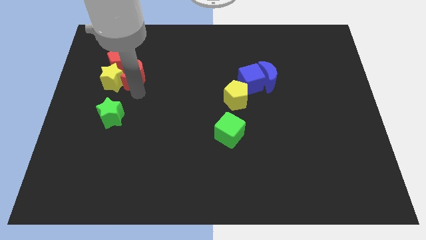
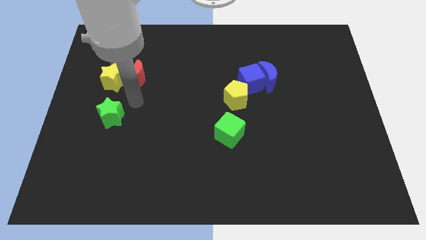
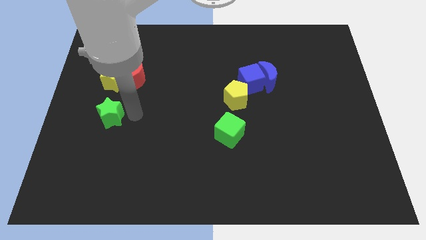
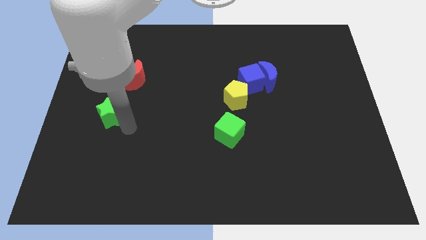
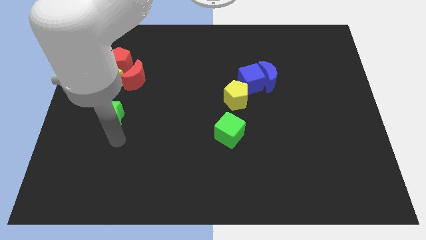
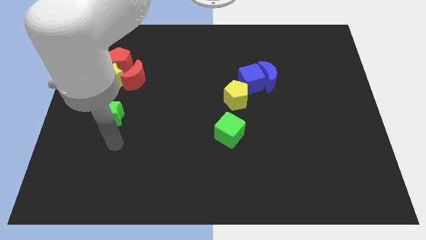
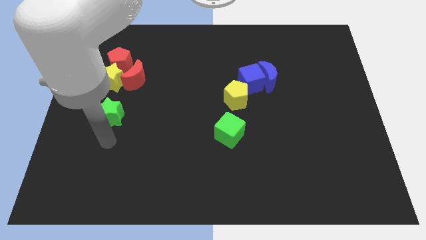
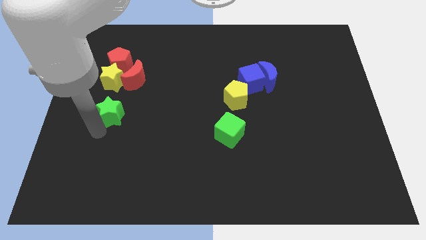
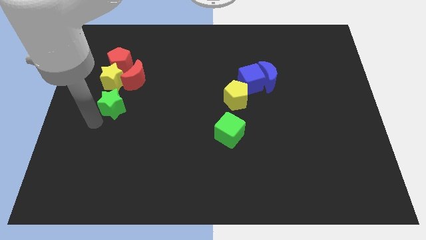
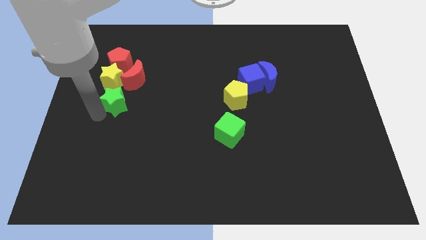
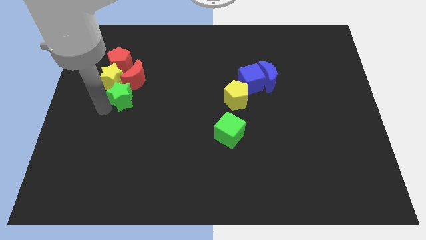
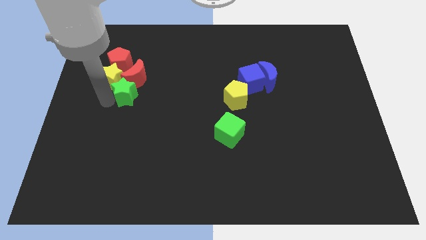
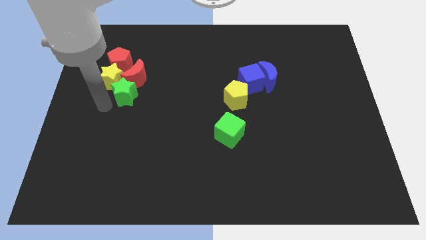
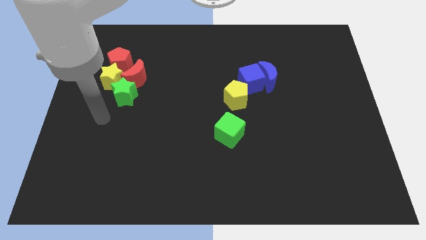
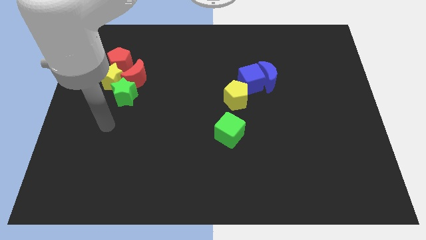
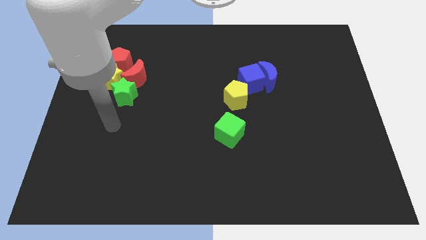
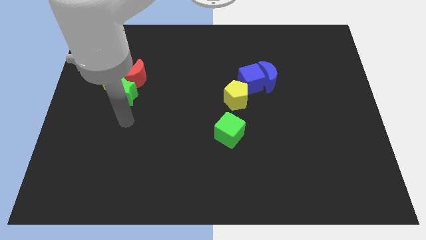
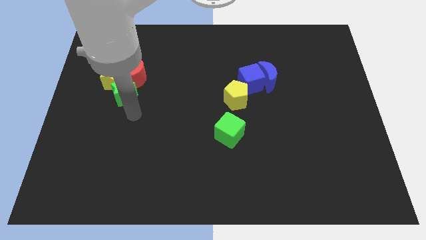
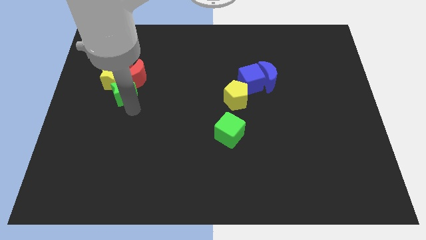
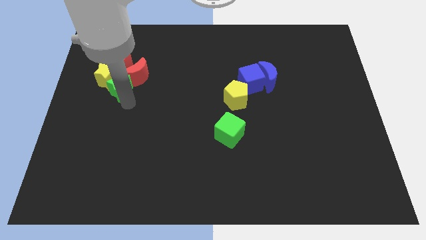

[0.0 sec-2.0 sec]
push the green star into the group of blocks

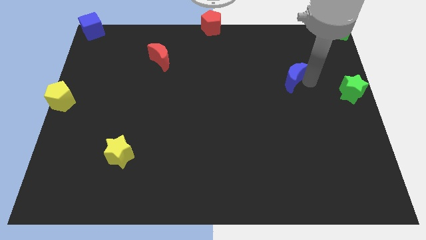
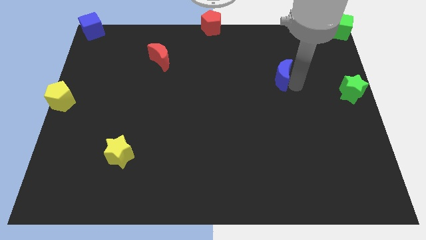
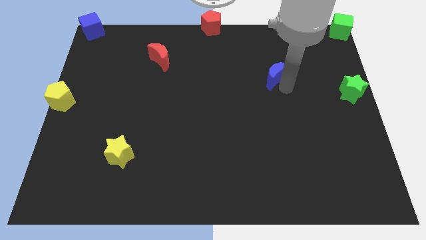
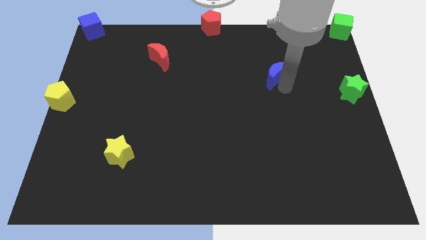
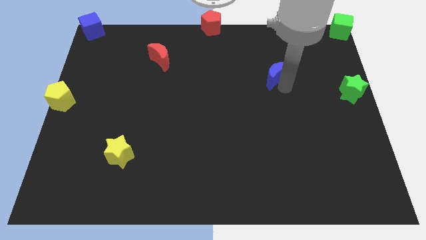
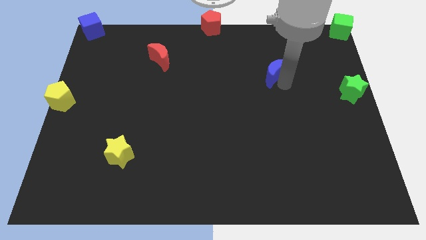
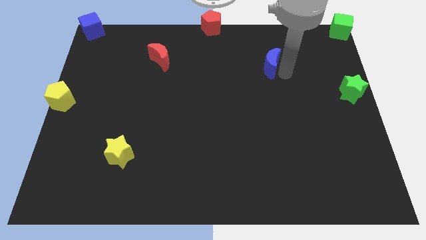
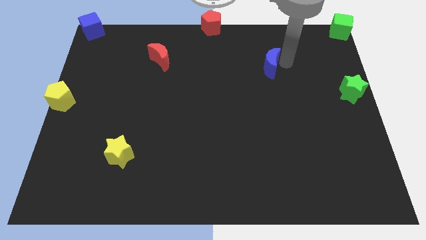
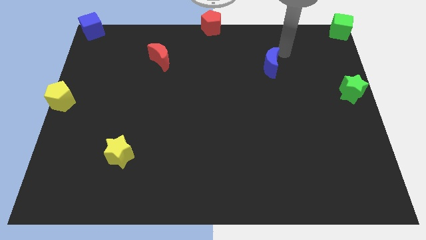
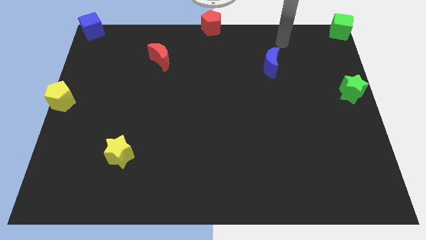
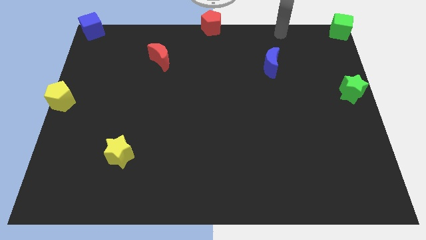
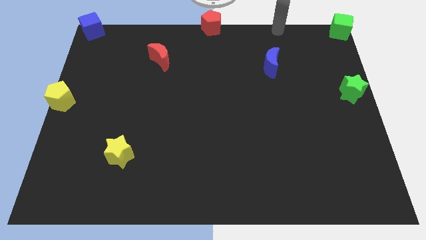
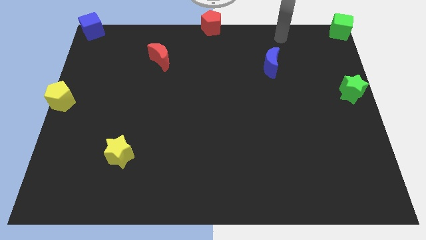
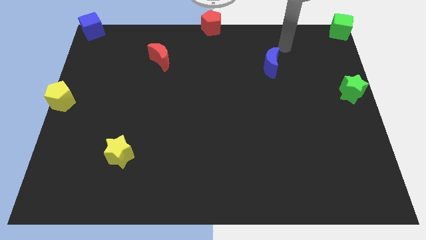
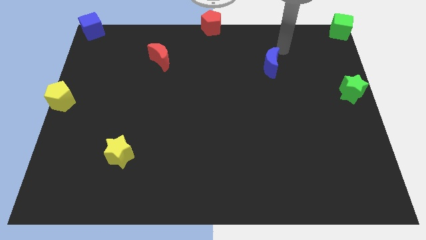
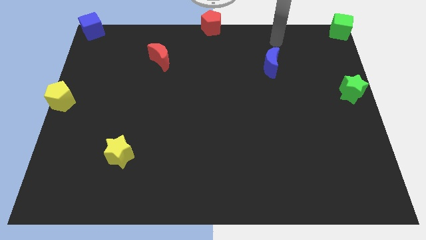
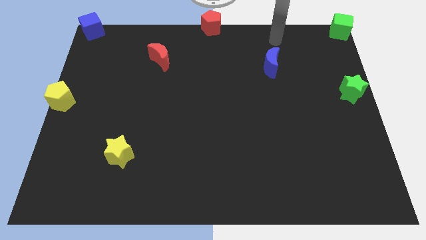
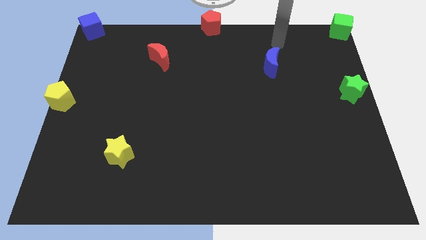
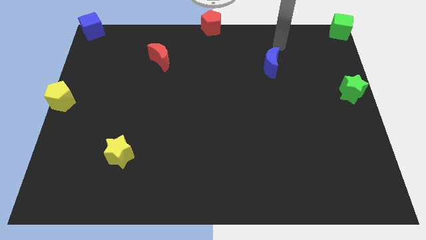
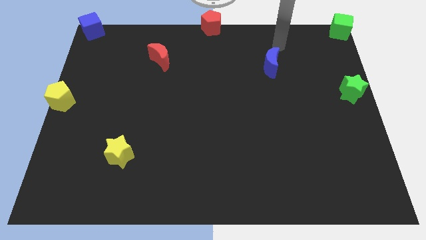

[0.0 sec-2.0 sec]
slightly move the blue moon to the top right

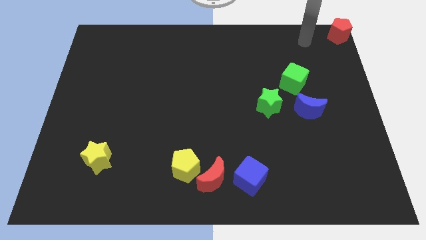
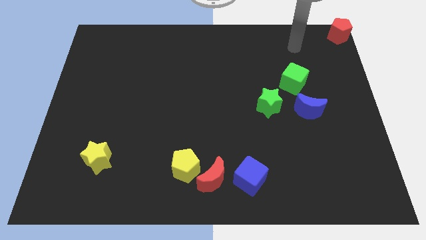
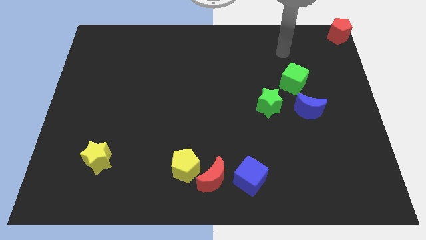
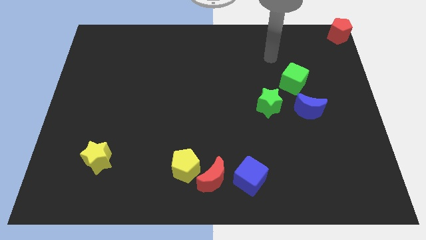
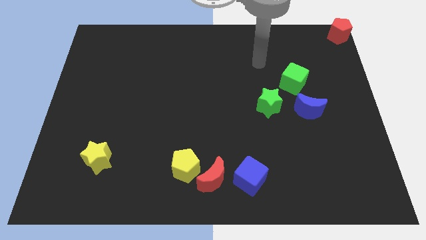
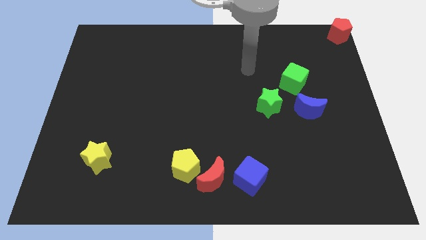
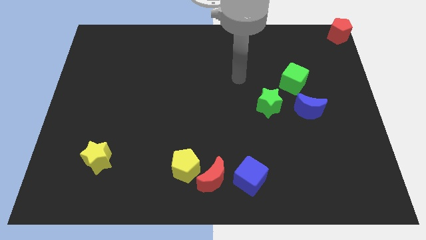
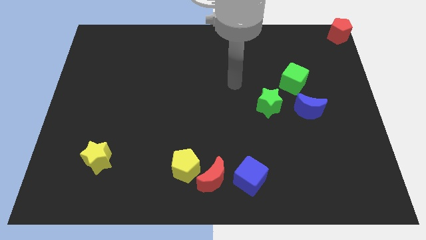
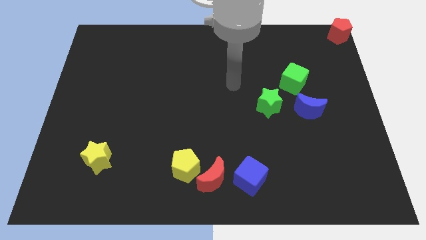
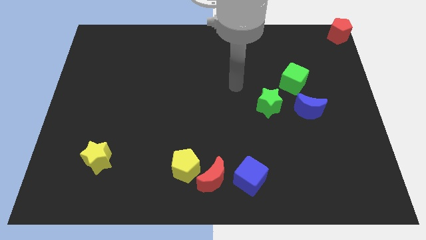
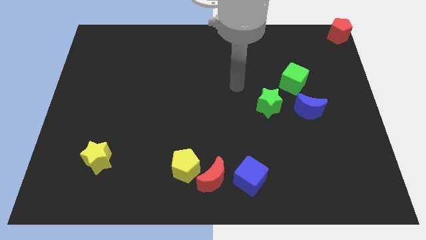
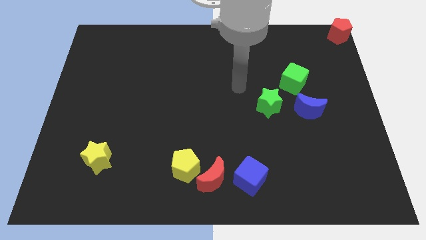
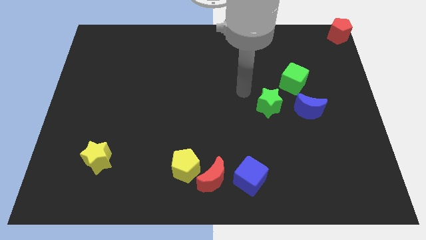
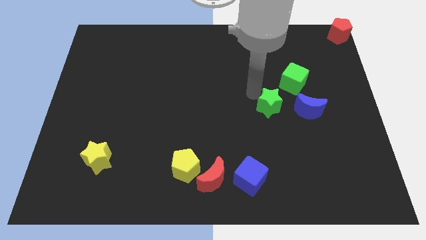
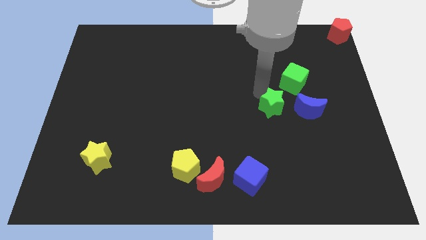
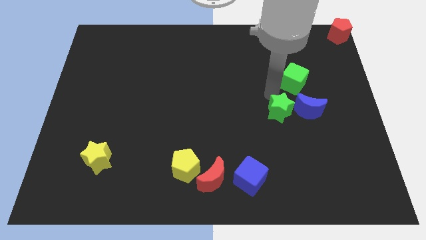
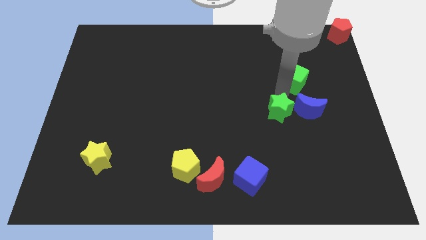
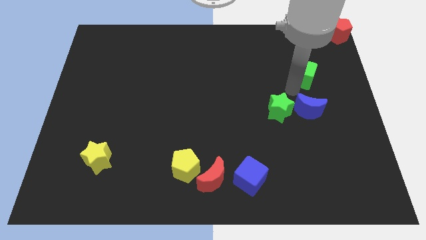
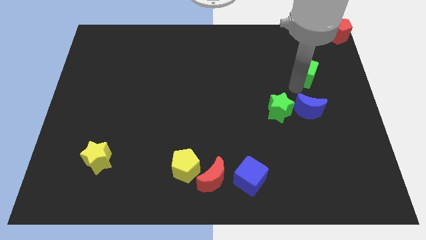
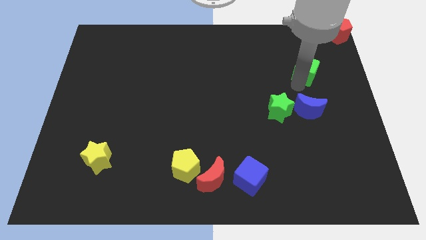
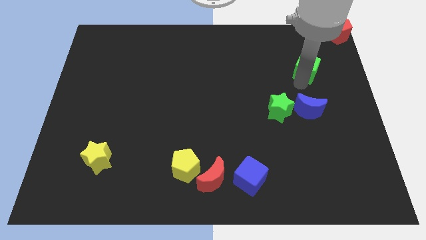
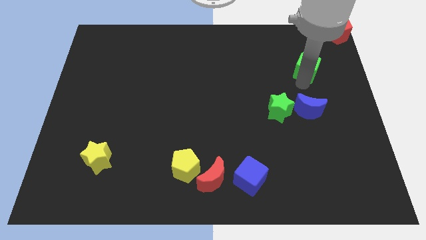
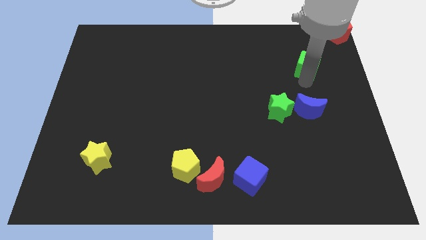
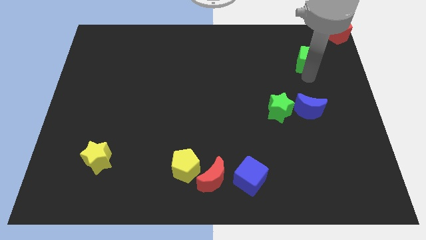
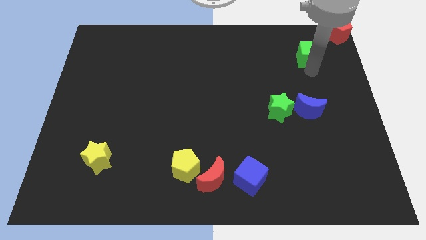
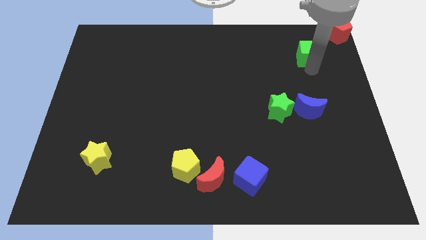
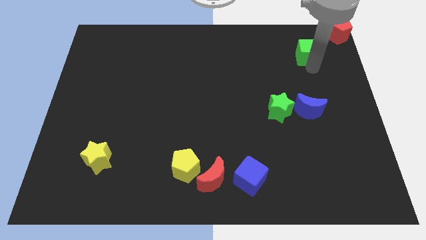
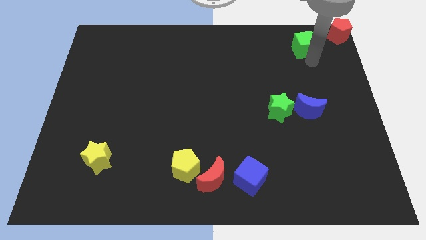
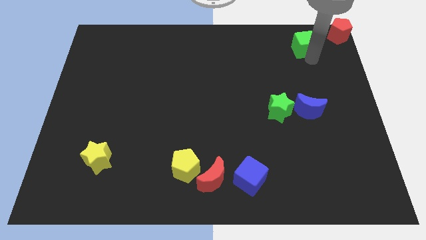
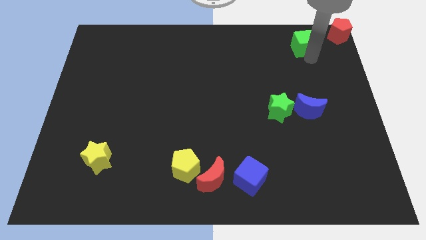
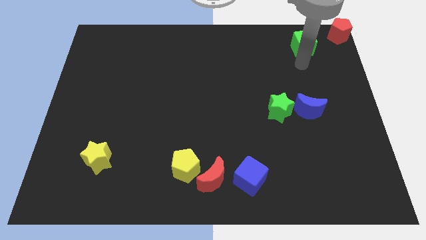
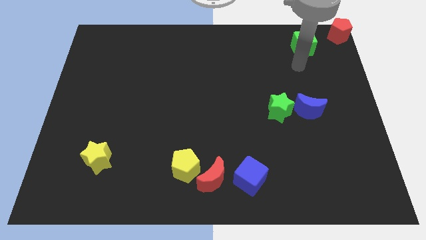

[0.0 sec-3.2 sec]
push the green cube towards top

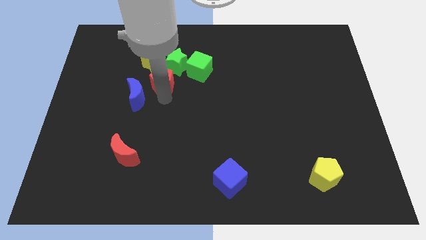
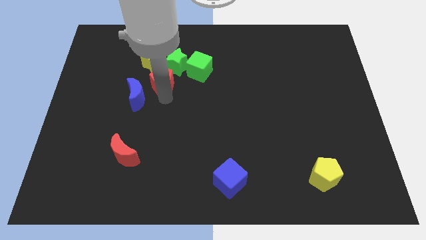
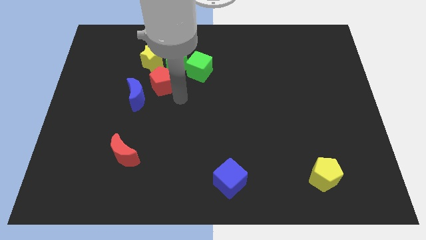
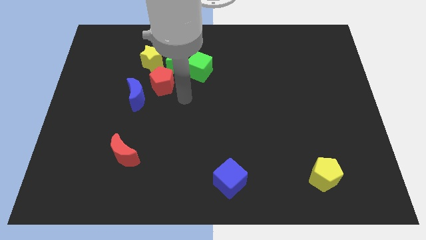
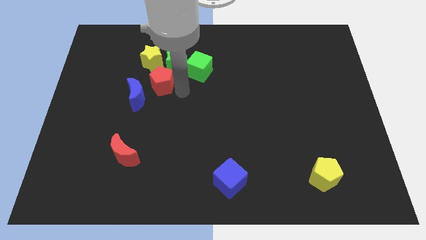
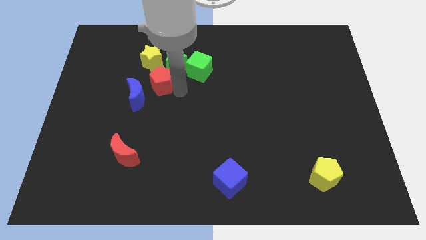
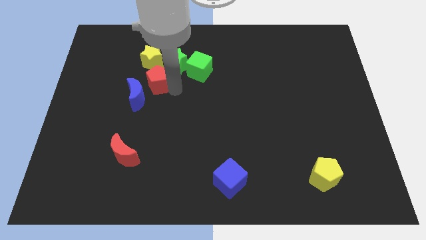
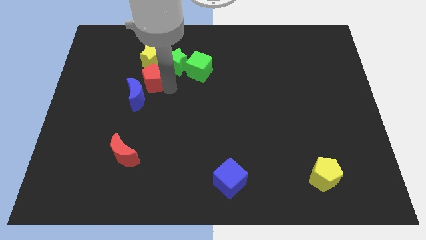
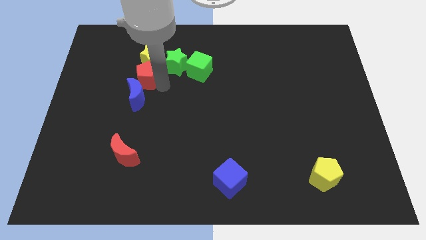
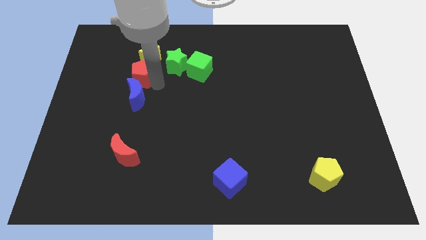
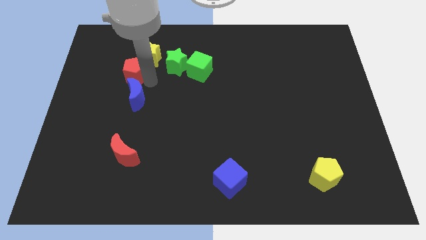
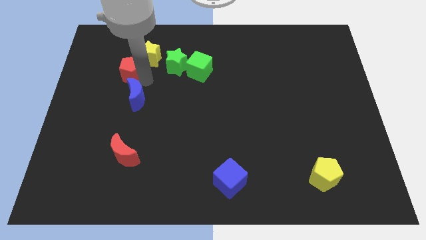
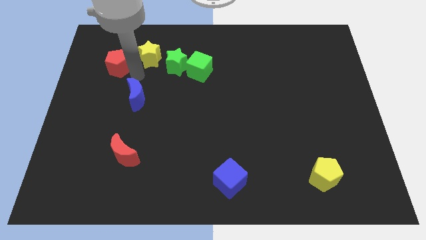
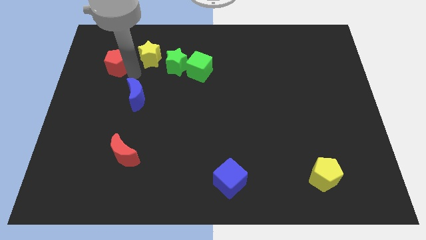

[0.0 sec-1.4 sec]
push the red pentagon towards the top left side of the blue crescent

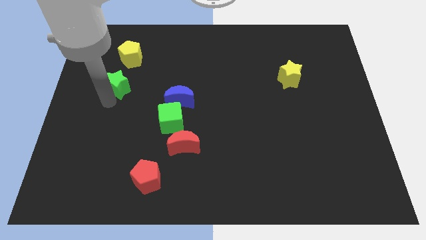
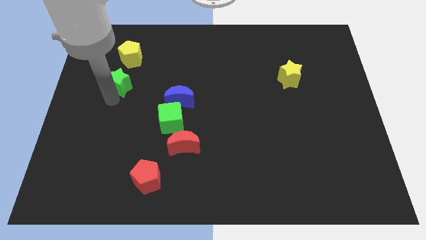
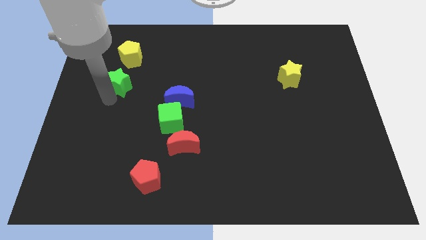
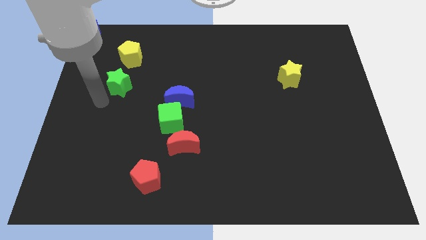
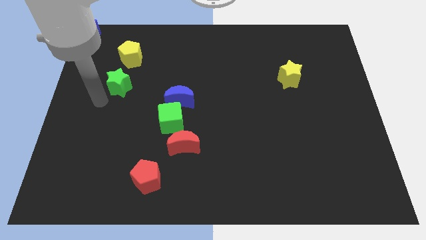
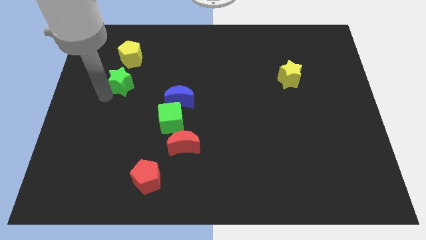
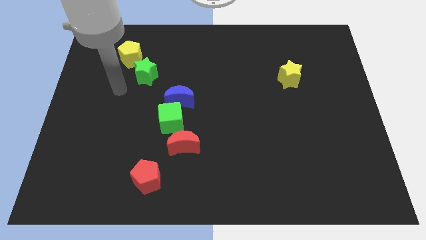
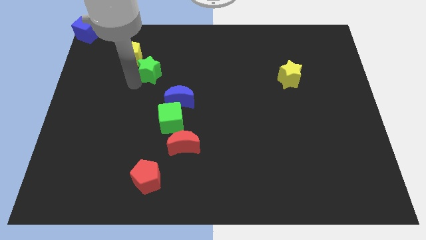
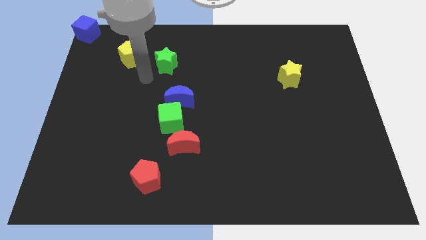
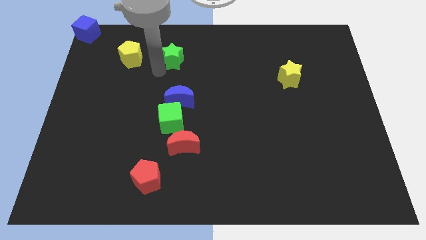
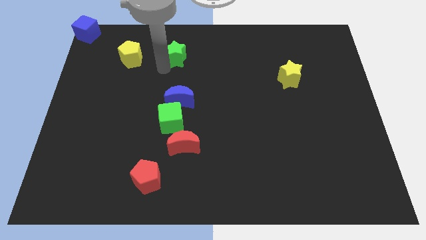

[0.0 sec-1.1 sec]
place the green star to the right side of the yellow pentagon
